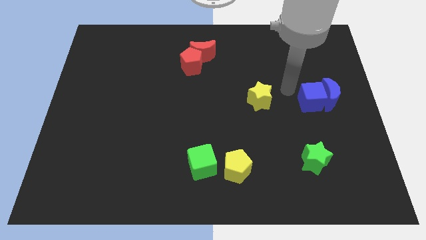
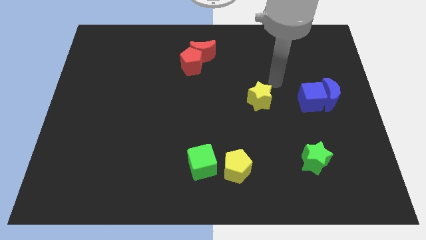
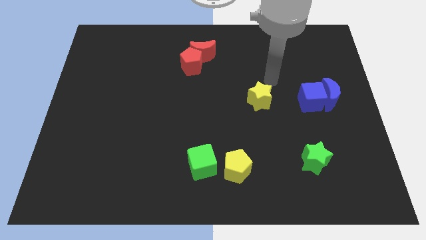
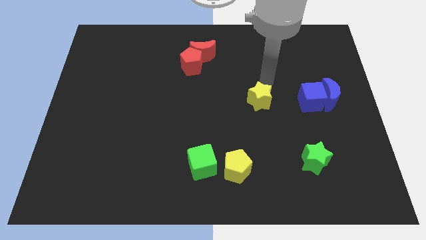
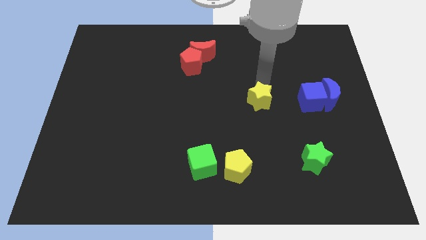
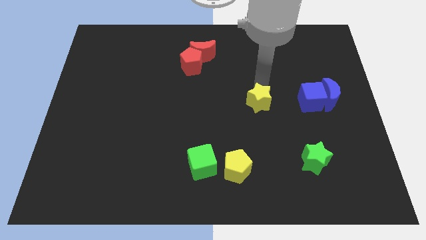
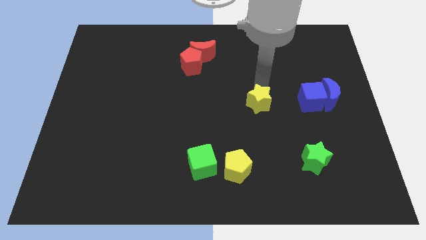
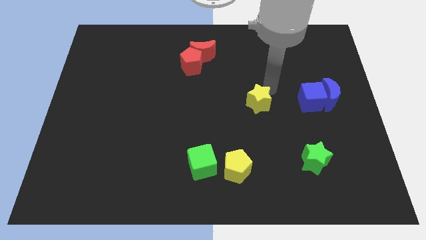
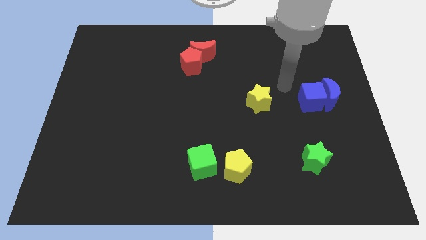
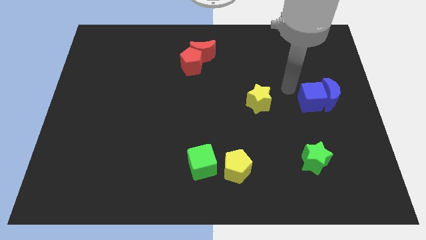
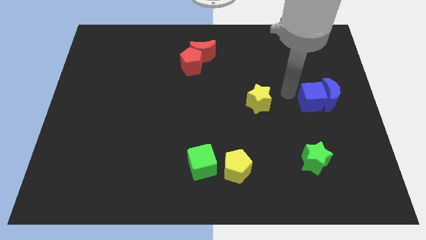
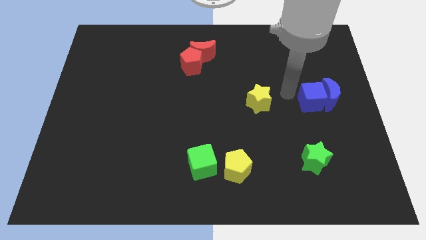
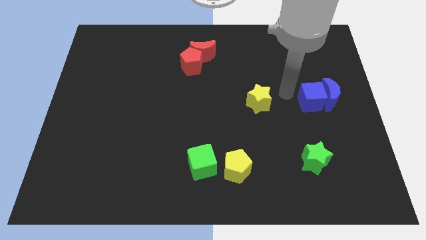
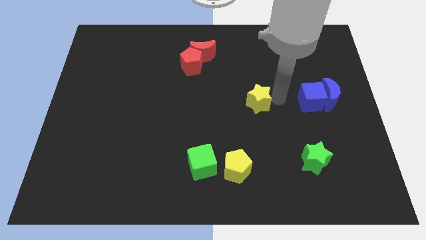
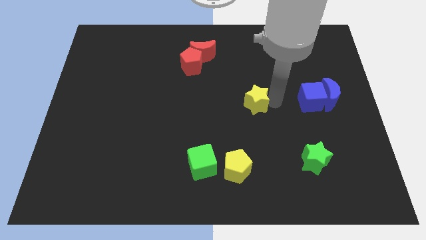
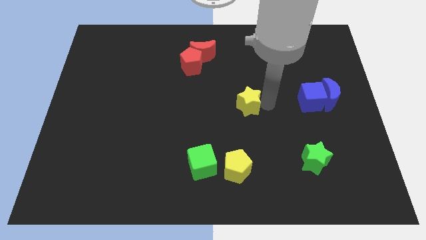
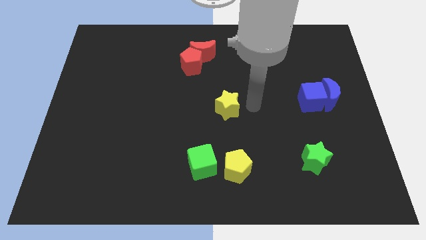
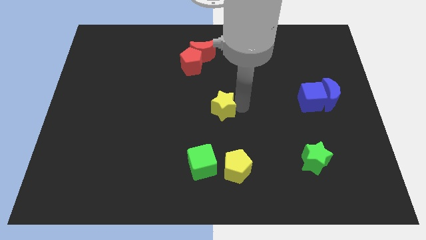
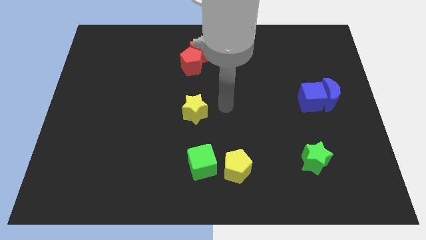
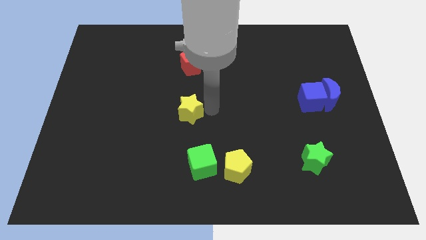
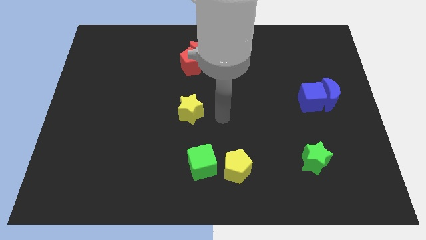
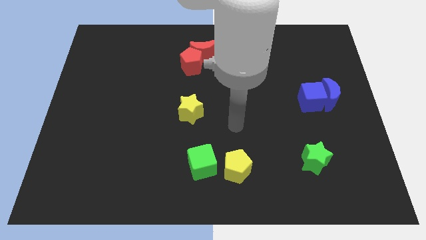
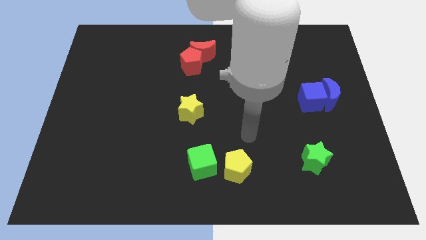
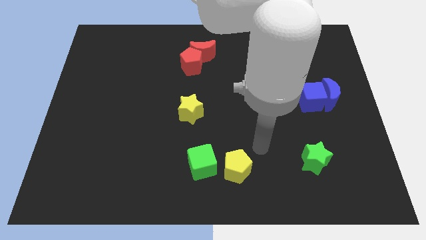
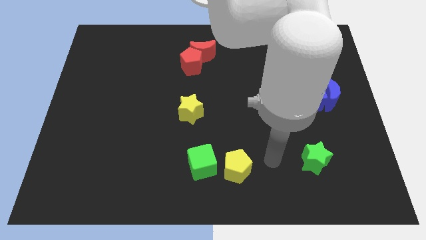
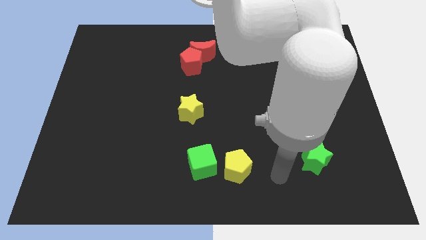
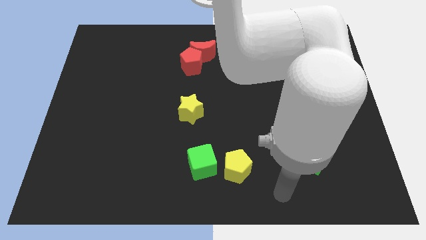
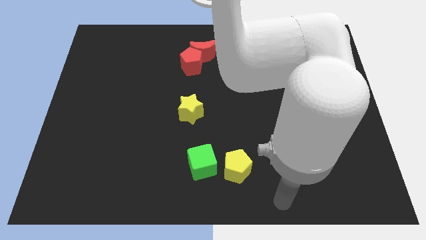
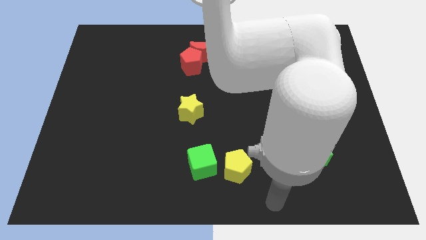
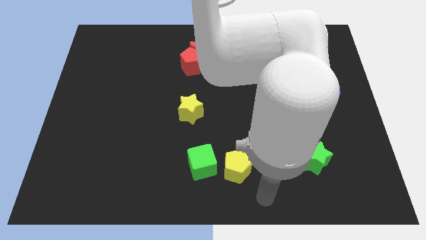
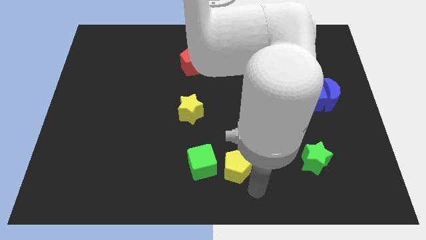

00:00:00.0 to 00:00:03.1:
place the yellow star in between the red pentagon and green cube

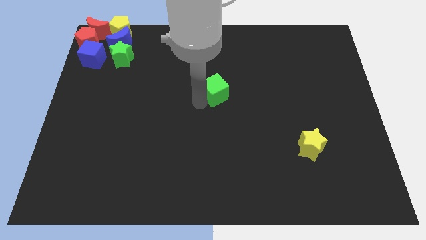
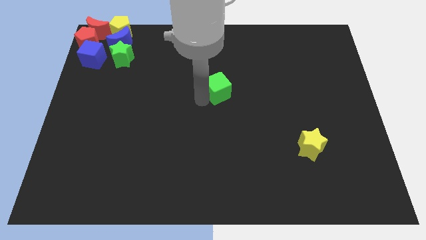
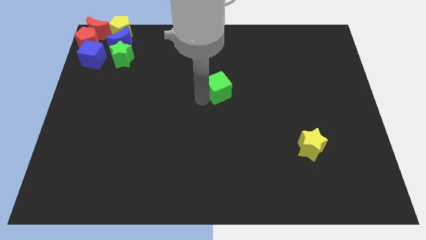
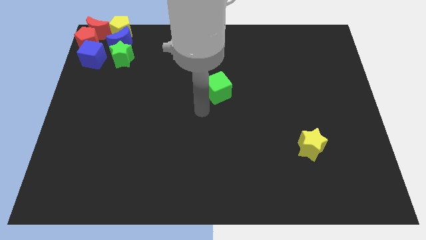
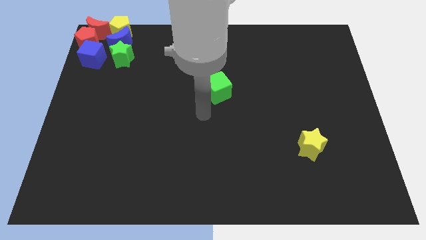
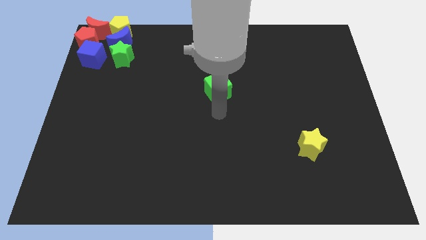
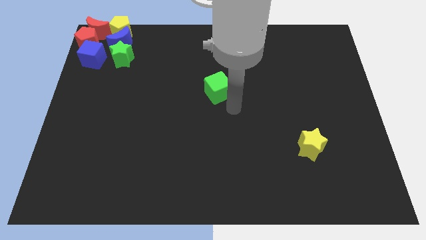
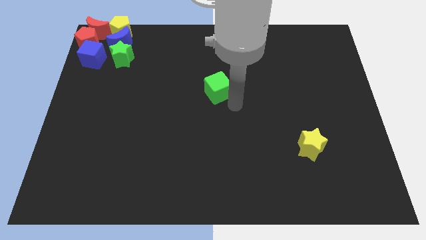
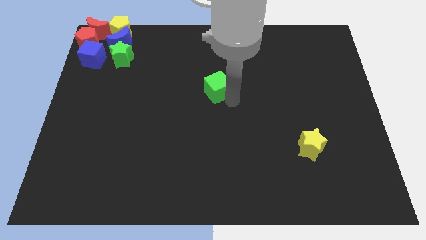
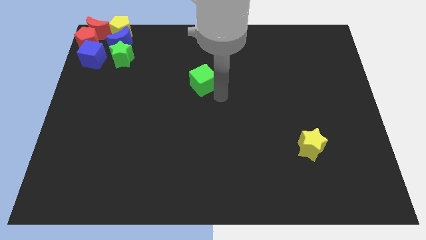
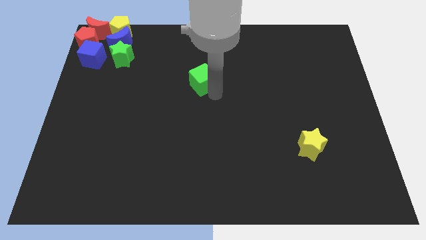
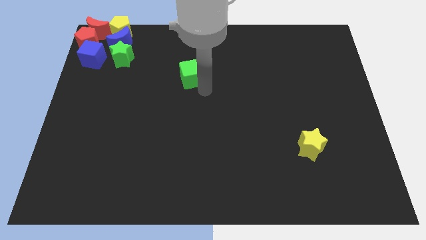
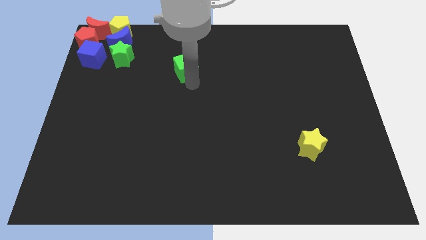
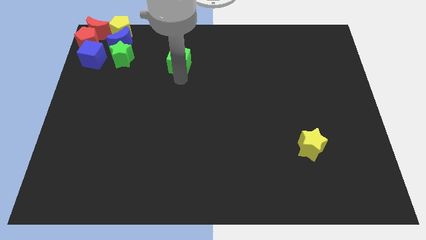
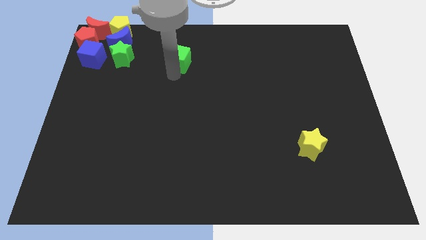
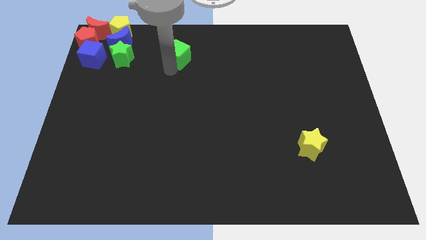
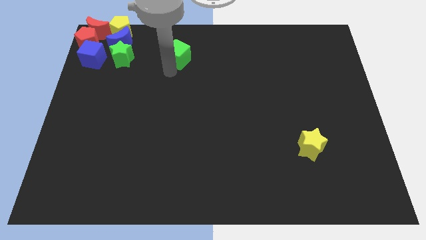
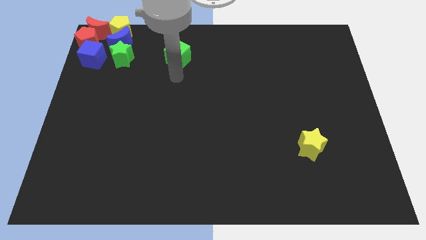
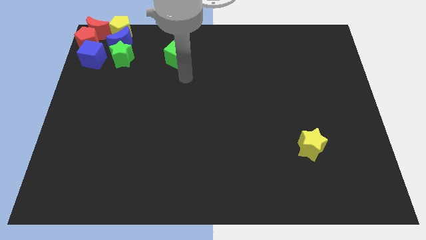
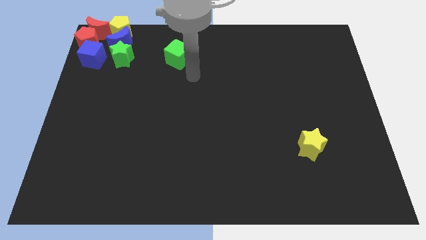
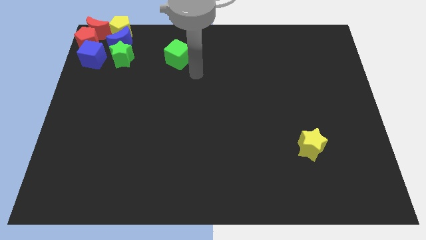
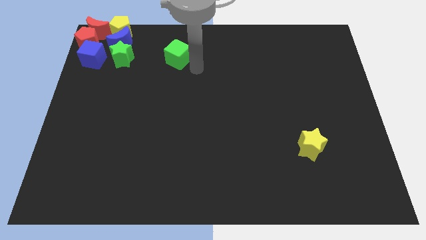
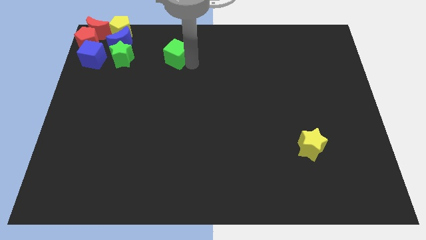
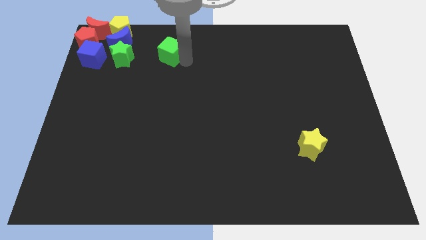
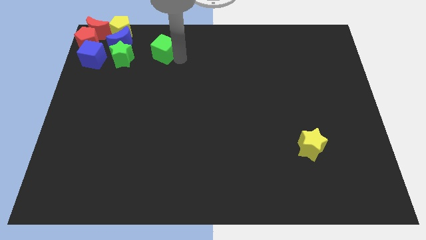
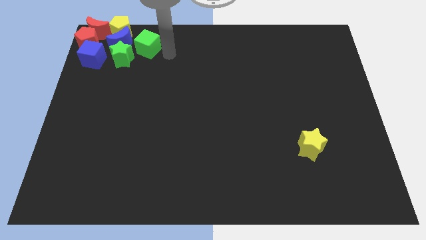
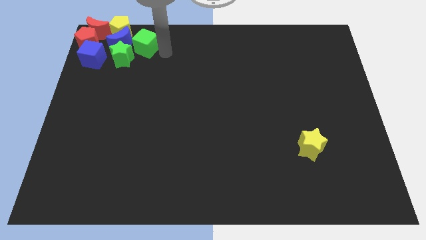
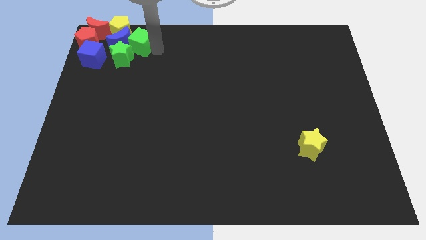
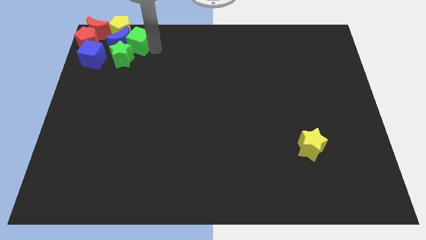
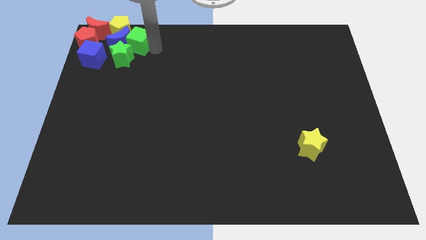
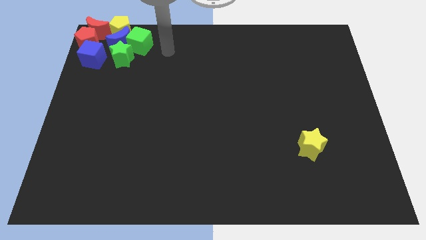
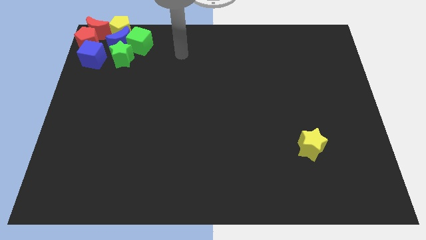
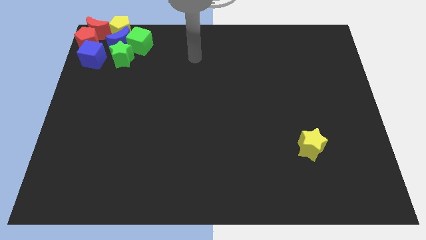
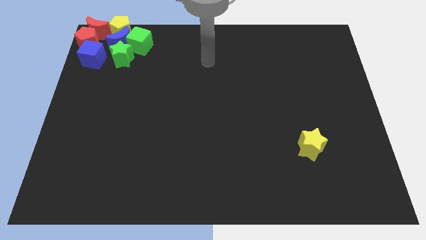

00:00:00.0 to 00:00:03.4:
push the green cube to the top right side of the green star

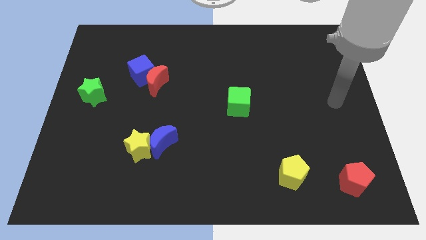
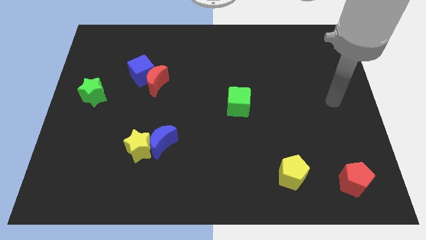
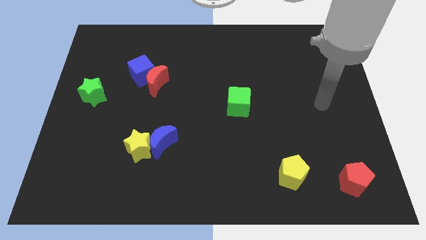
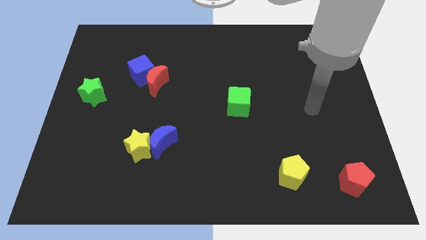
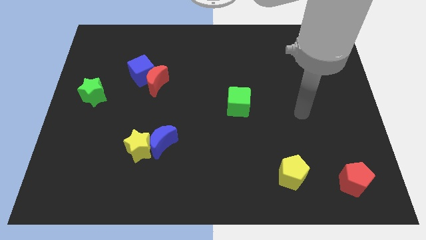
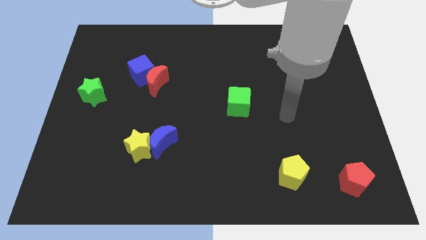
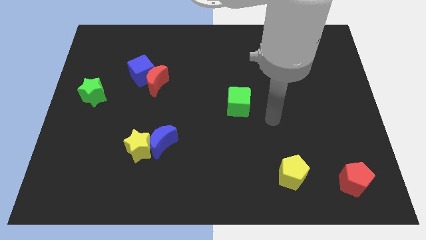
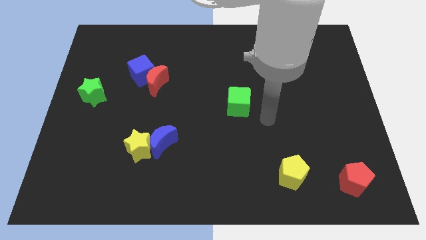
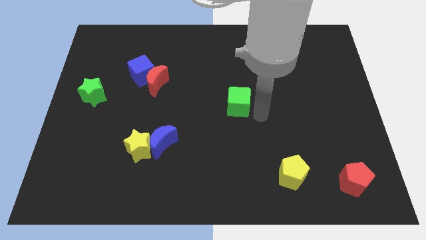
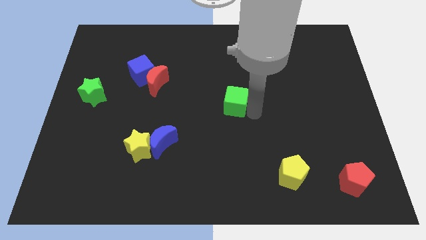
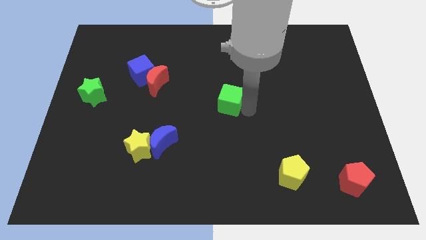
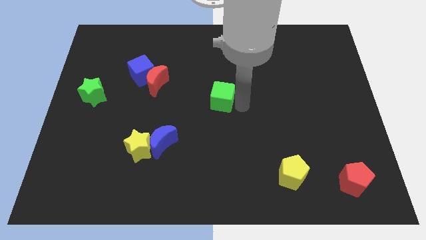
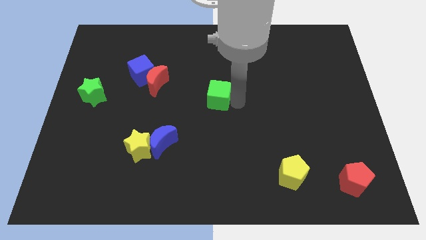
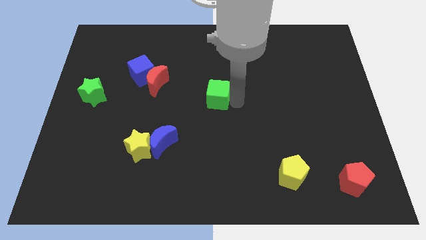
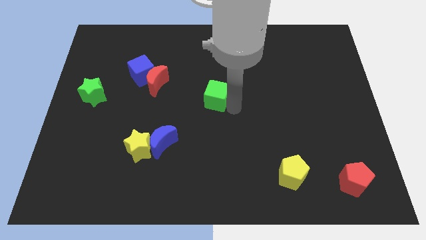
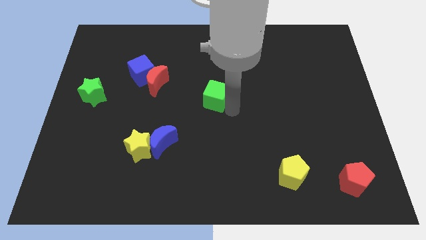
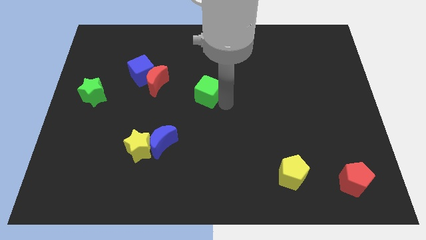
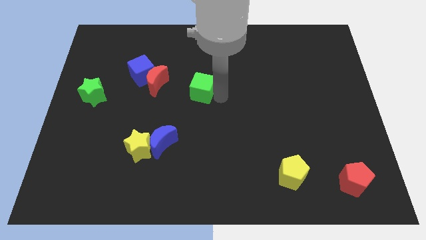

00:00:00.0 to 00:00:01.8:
push the green cube towards the right side of the red moon

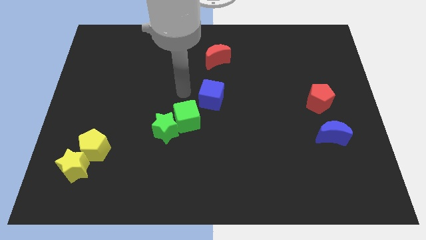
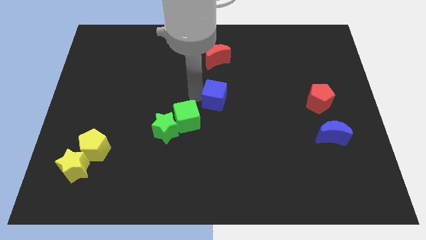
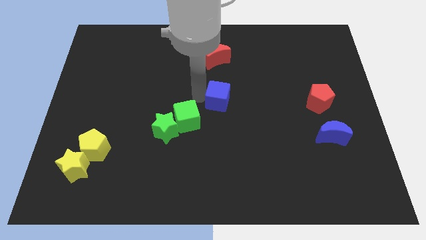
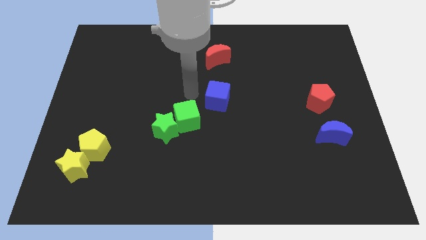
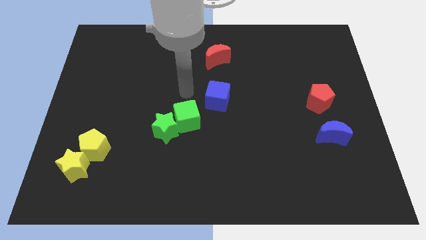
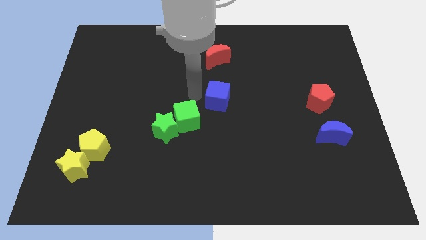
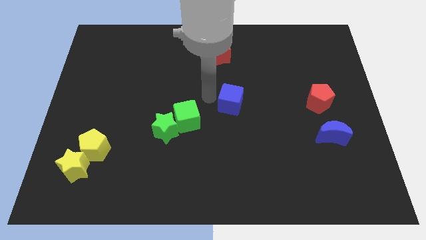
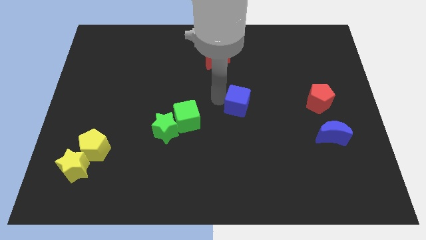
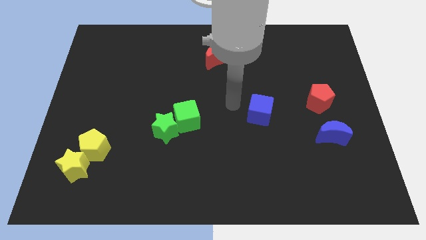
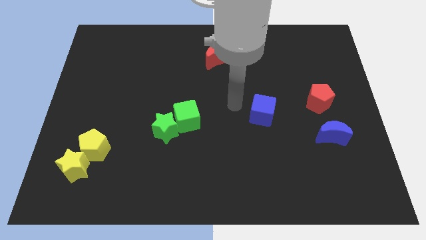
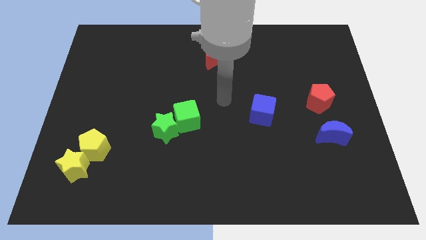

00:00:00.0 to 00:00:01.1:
slide blue cube to the right of green cube
